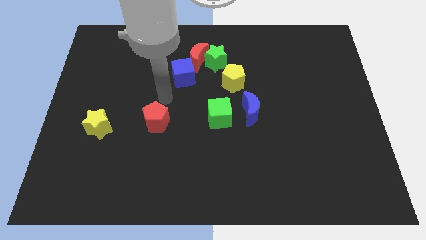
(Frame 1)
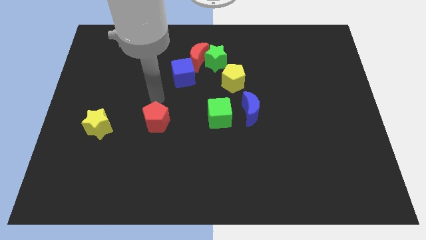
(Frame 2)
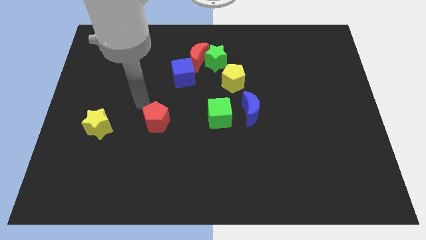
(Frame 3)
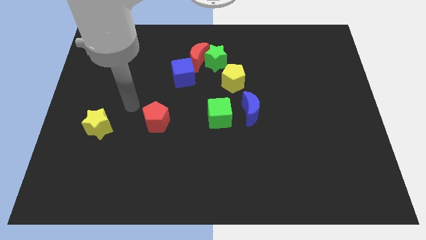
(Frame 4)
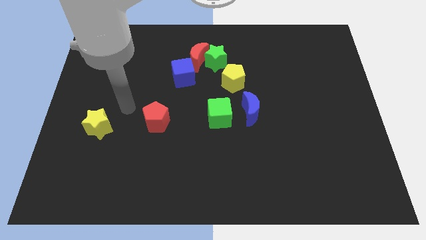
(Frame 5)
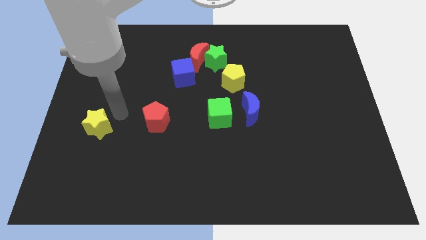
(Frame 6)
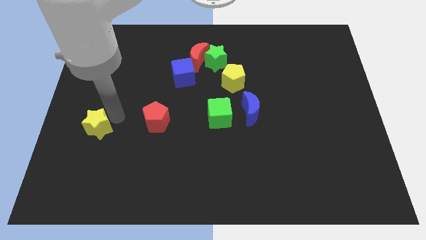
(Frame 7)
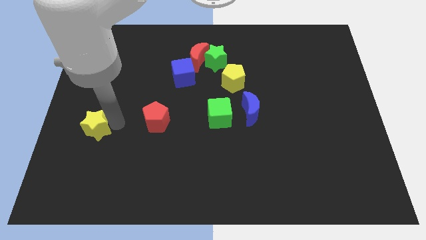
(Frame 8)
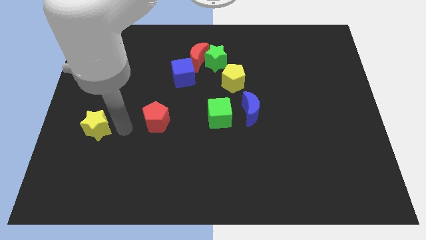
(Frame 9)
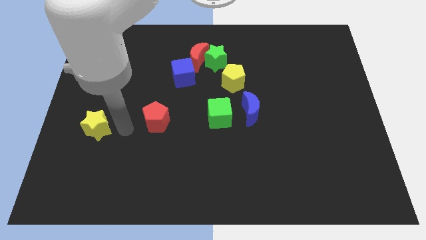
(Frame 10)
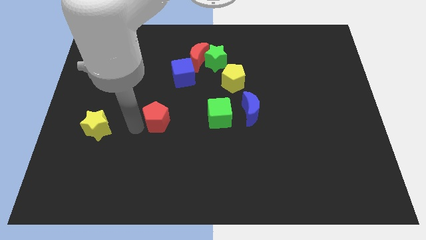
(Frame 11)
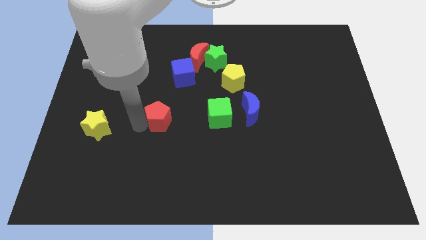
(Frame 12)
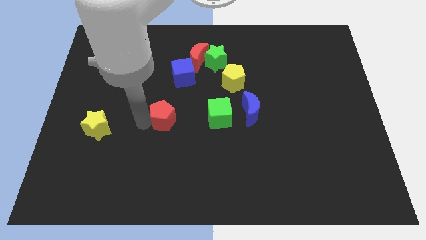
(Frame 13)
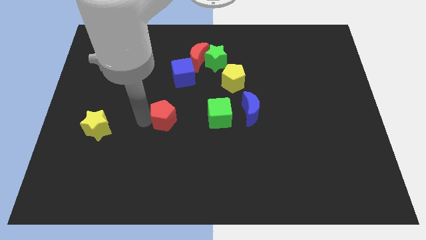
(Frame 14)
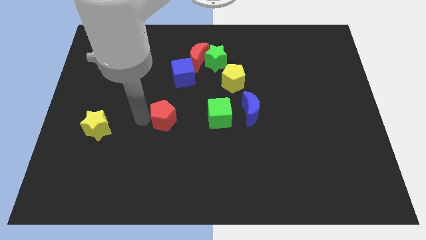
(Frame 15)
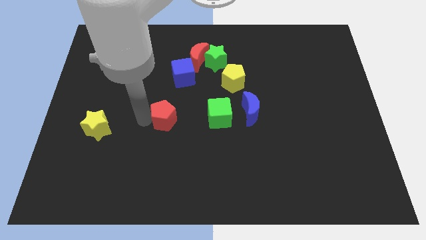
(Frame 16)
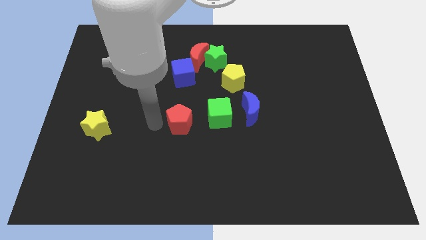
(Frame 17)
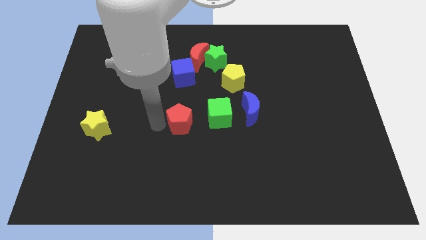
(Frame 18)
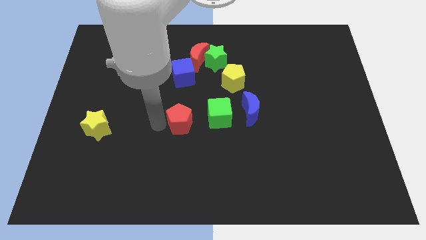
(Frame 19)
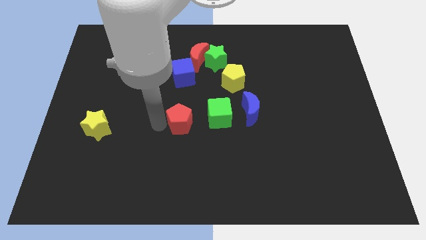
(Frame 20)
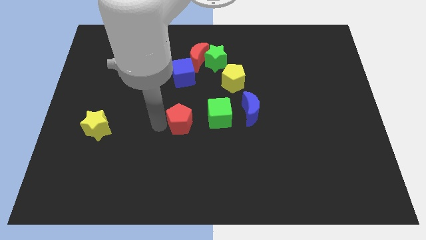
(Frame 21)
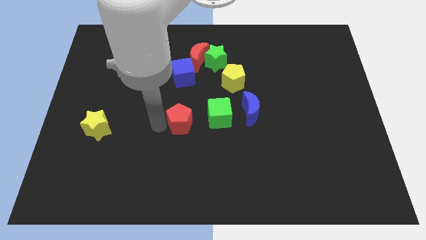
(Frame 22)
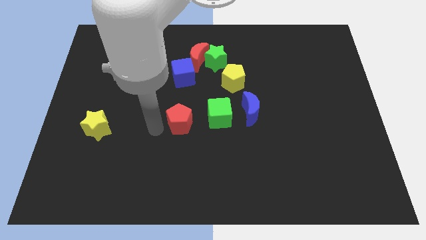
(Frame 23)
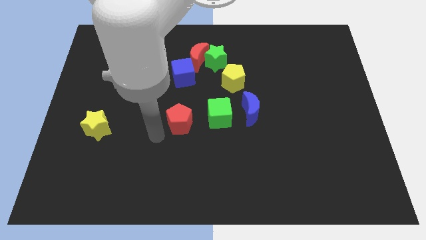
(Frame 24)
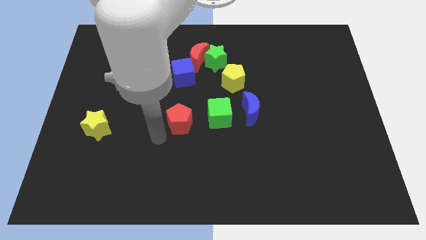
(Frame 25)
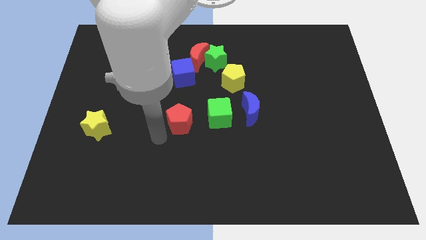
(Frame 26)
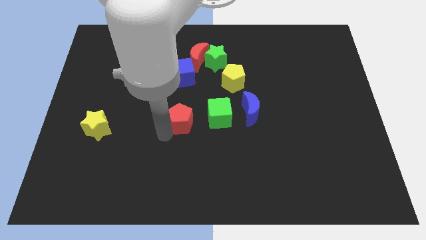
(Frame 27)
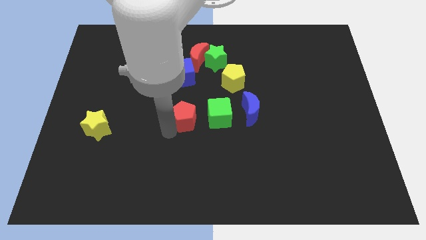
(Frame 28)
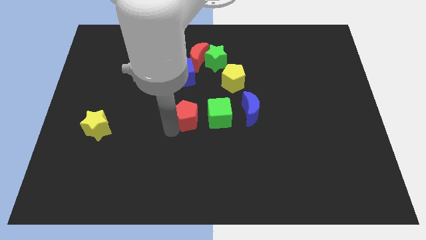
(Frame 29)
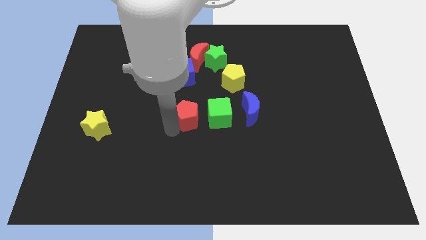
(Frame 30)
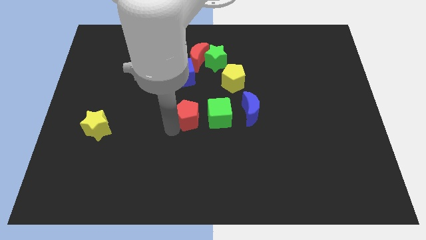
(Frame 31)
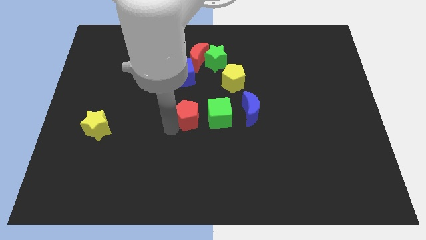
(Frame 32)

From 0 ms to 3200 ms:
push the red pentagon to the center towards green cube

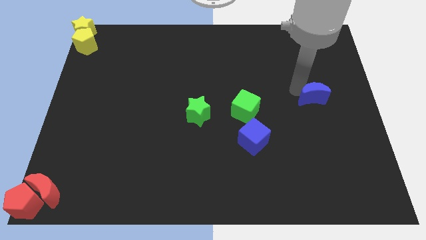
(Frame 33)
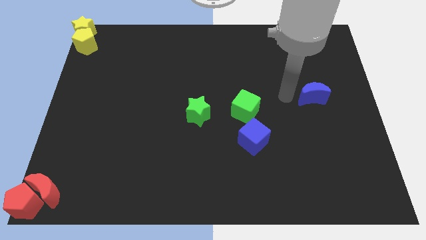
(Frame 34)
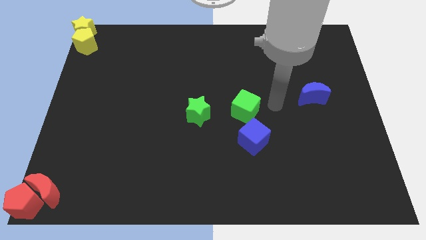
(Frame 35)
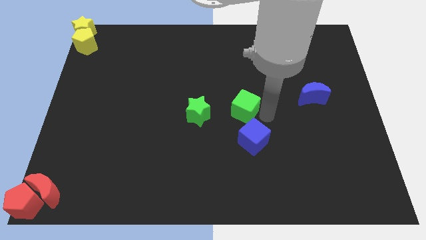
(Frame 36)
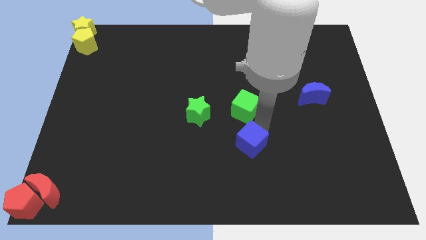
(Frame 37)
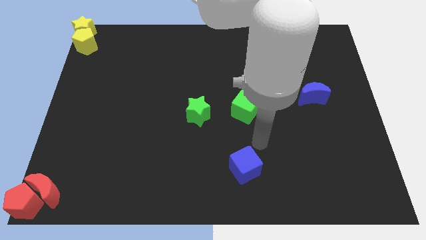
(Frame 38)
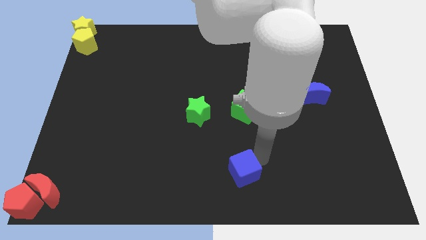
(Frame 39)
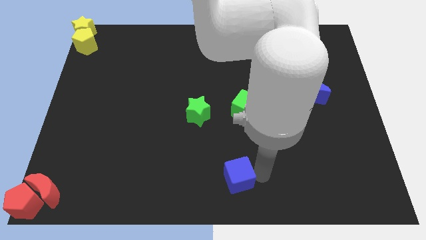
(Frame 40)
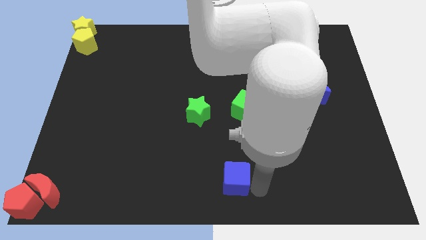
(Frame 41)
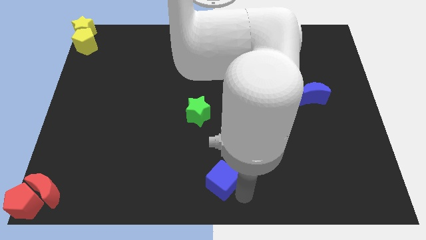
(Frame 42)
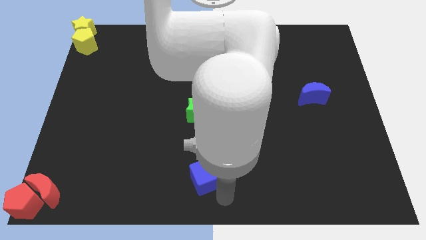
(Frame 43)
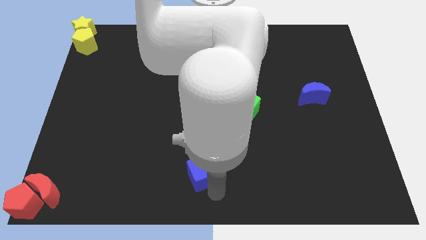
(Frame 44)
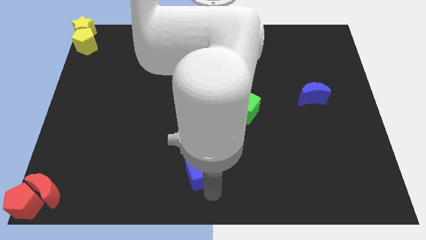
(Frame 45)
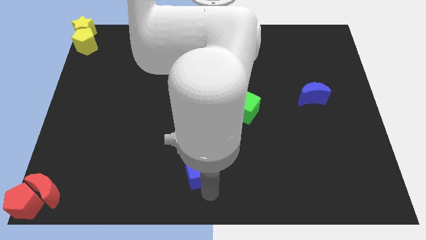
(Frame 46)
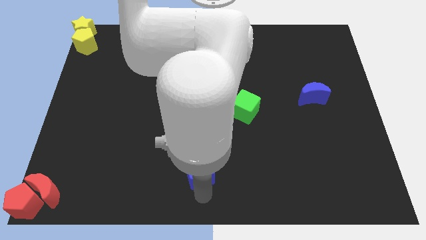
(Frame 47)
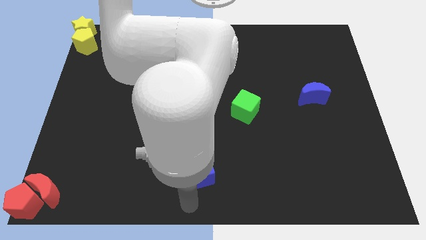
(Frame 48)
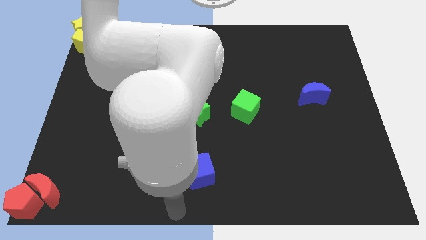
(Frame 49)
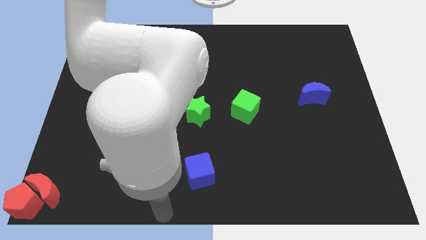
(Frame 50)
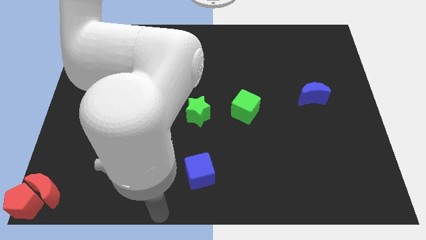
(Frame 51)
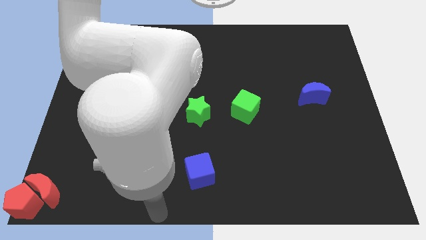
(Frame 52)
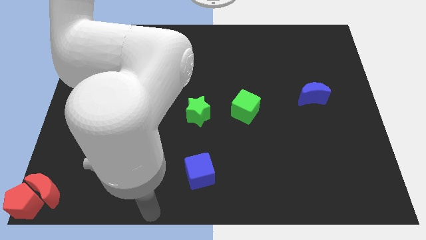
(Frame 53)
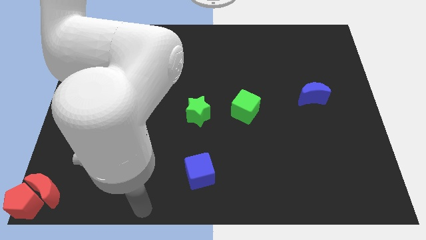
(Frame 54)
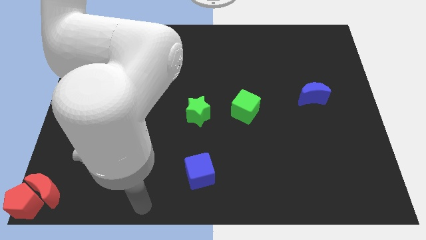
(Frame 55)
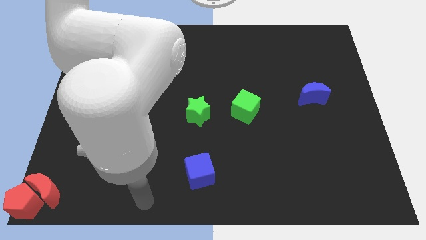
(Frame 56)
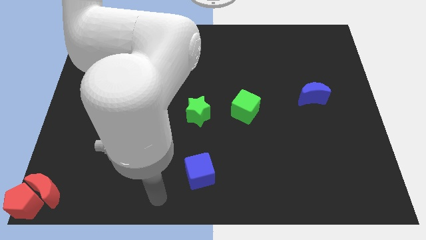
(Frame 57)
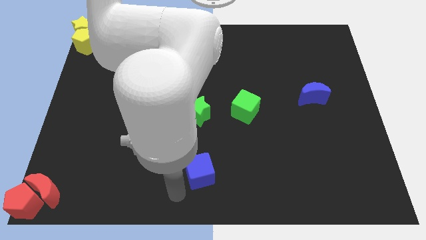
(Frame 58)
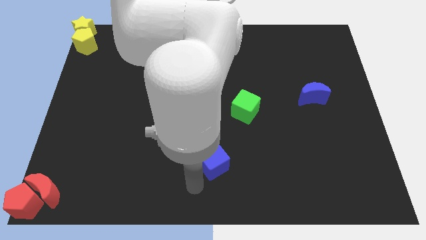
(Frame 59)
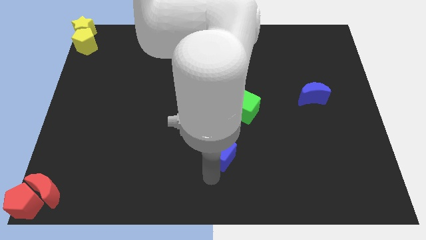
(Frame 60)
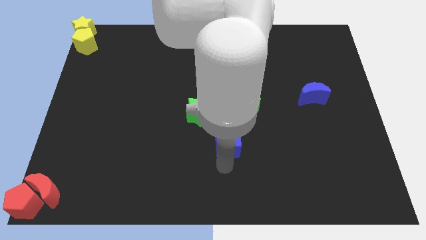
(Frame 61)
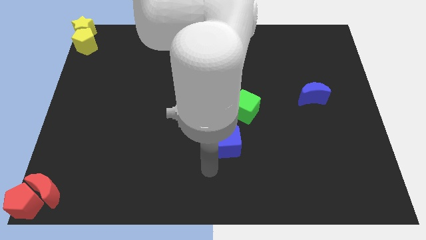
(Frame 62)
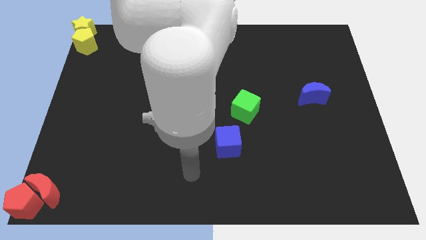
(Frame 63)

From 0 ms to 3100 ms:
place the blue cube below the green cube

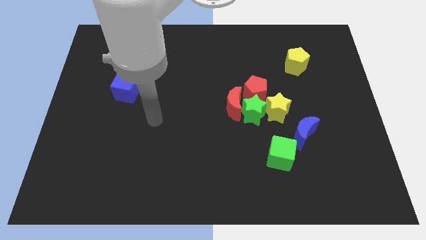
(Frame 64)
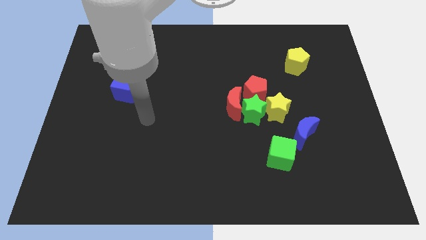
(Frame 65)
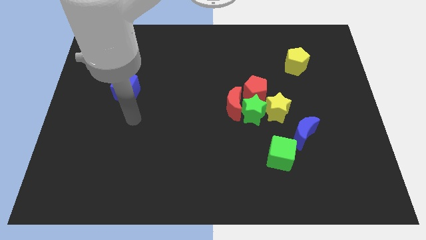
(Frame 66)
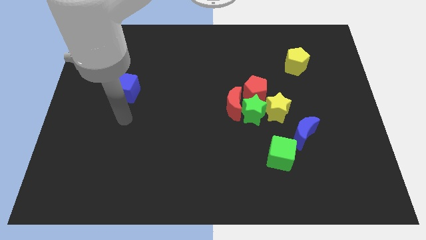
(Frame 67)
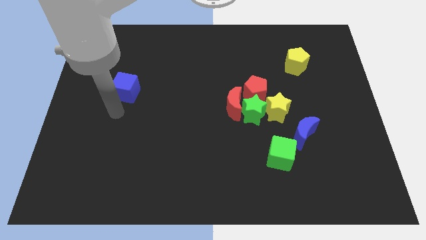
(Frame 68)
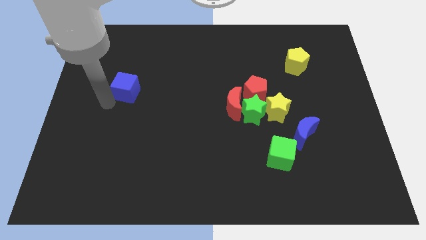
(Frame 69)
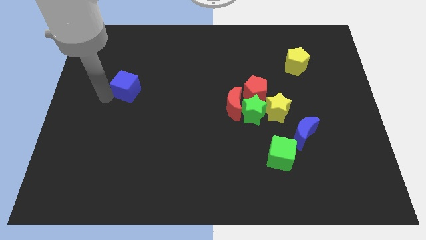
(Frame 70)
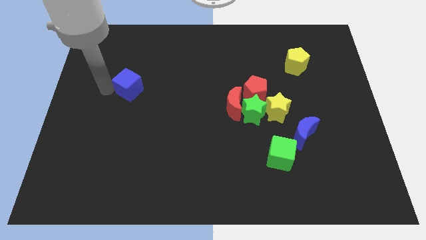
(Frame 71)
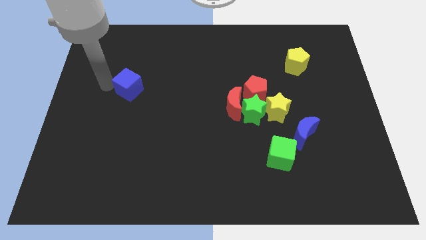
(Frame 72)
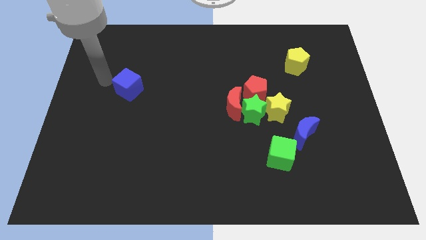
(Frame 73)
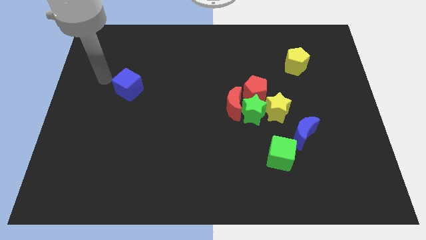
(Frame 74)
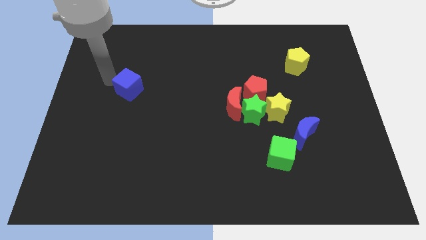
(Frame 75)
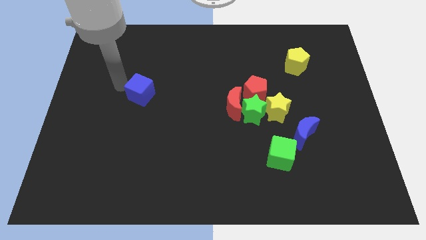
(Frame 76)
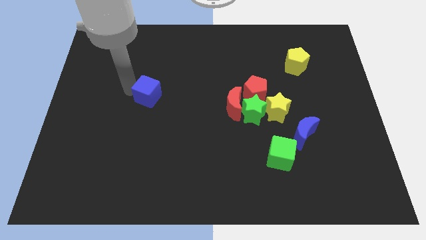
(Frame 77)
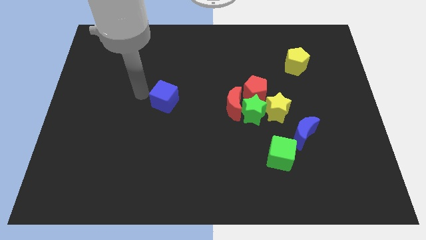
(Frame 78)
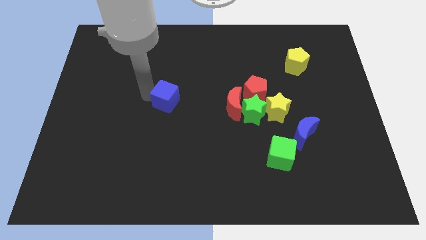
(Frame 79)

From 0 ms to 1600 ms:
place your arm left to blue cube

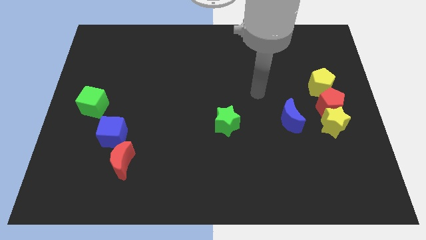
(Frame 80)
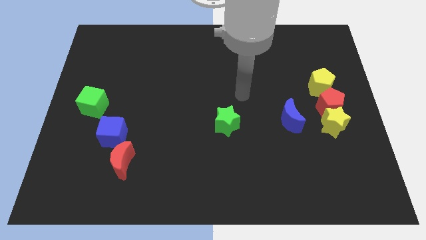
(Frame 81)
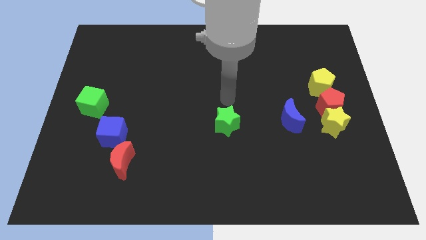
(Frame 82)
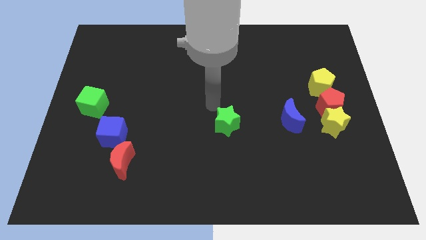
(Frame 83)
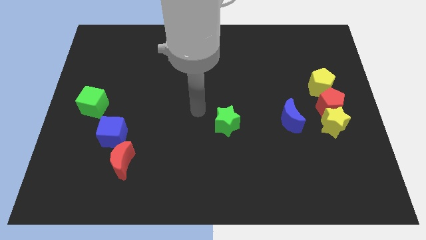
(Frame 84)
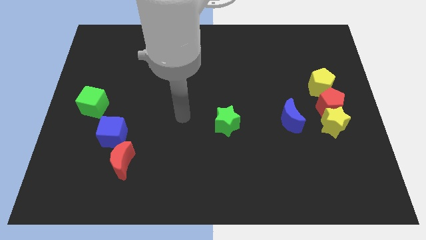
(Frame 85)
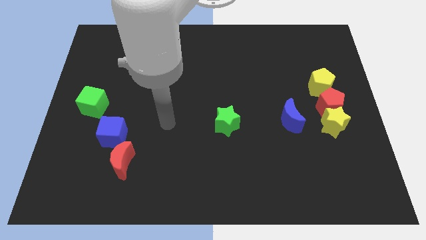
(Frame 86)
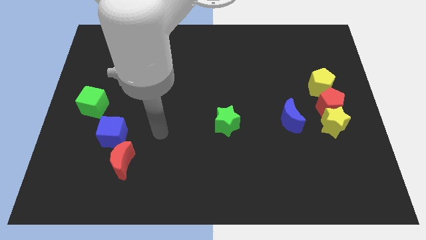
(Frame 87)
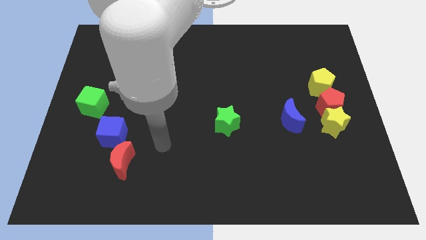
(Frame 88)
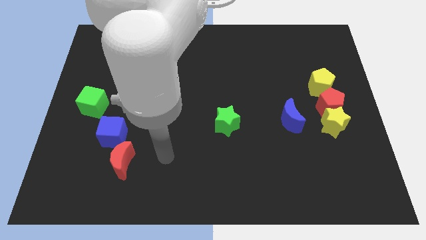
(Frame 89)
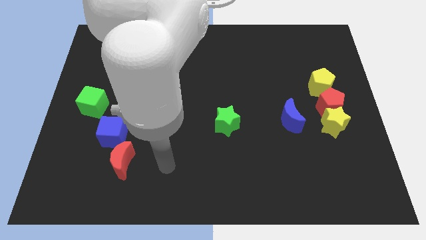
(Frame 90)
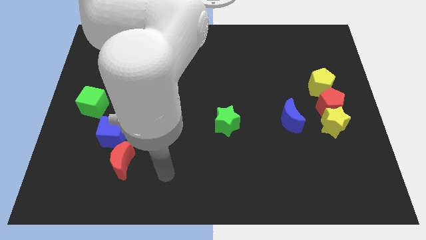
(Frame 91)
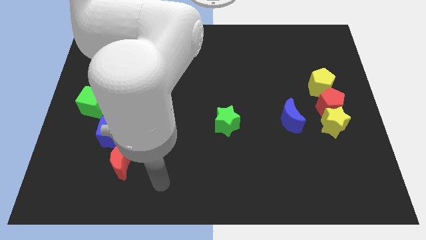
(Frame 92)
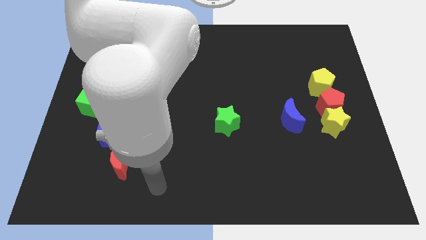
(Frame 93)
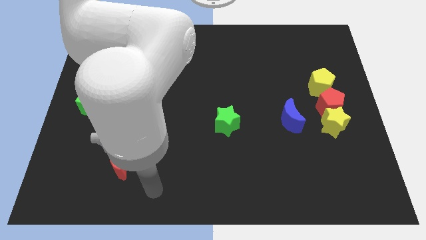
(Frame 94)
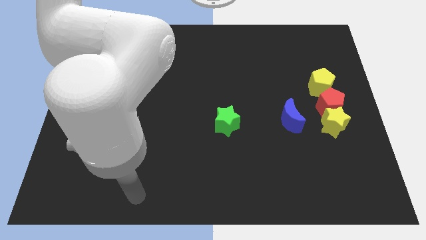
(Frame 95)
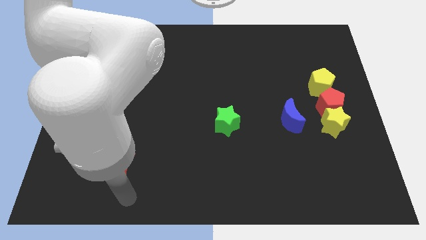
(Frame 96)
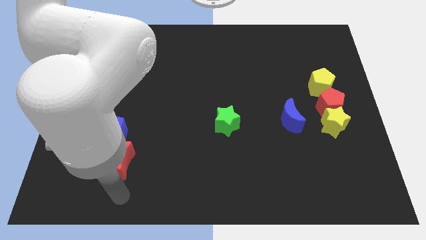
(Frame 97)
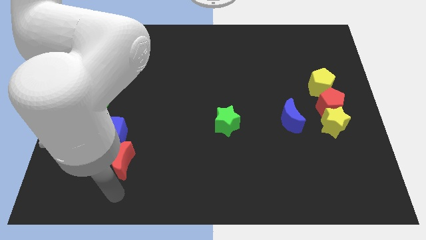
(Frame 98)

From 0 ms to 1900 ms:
place your arm below the red moon
